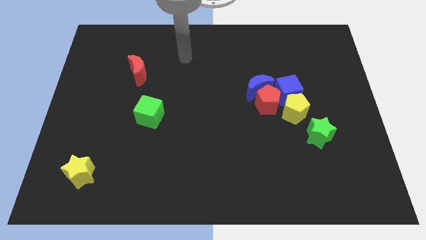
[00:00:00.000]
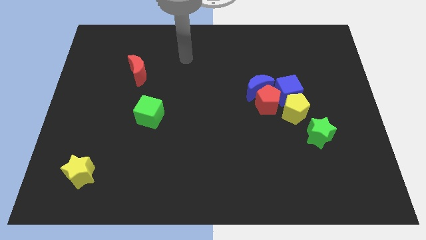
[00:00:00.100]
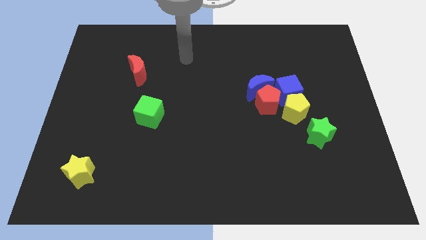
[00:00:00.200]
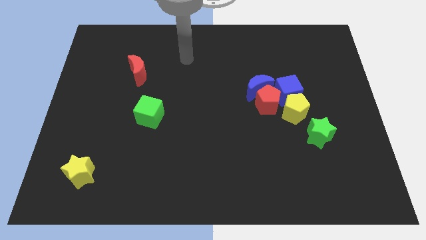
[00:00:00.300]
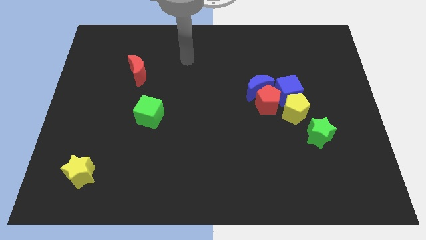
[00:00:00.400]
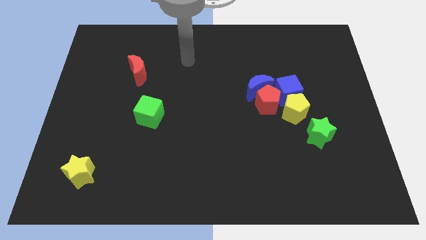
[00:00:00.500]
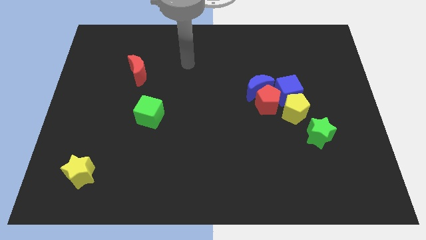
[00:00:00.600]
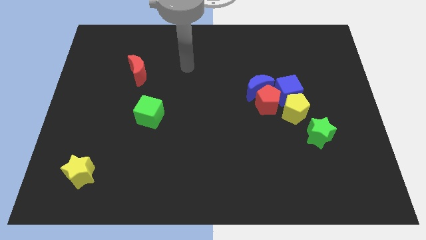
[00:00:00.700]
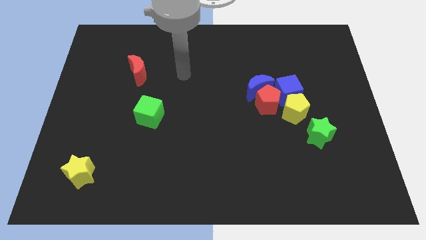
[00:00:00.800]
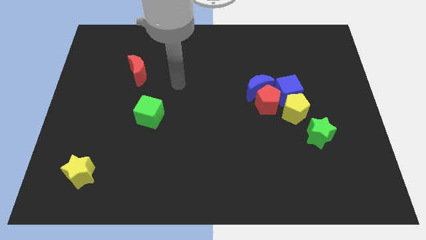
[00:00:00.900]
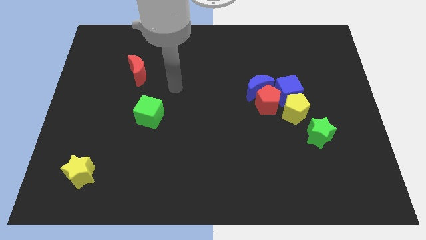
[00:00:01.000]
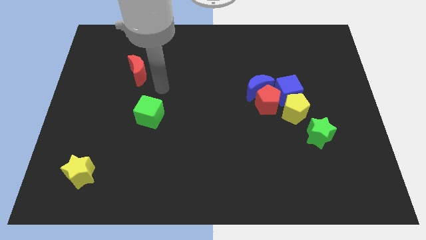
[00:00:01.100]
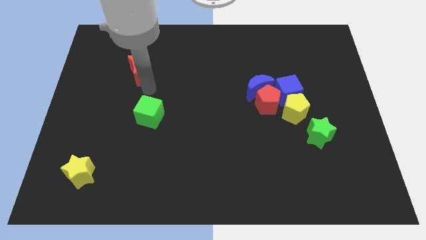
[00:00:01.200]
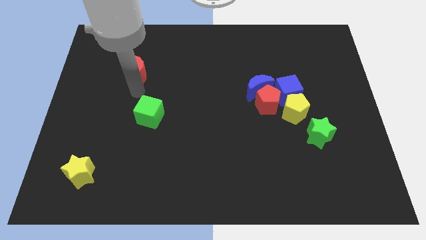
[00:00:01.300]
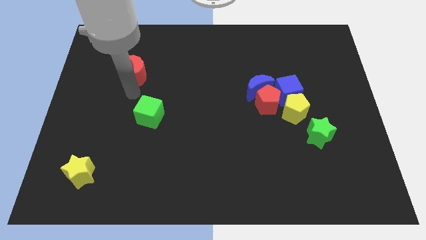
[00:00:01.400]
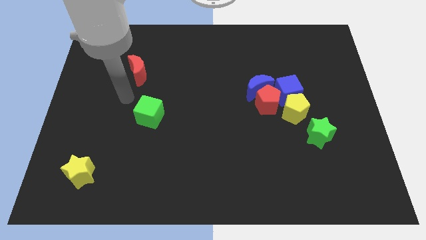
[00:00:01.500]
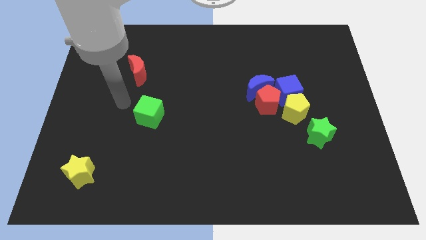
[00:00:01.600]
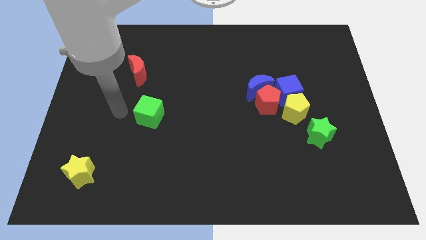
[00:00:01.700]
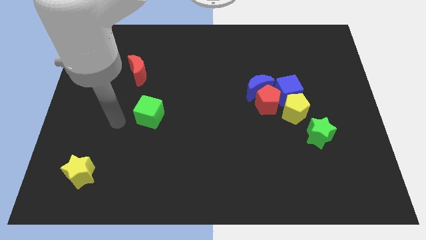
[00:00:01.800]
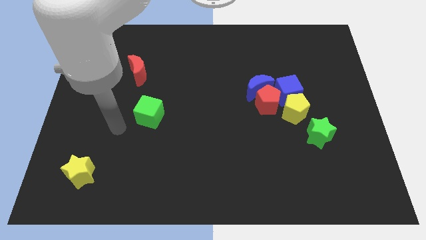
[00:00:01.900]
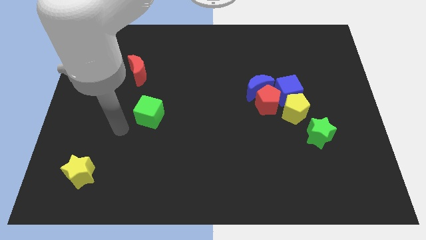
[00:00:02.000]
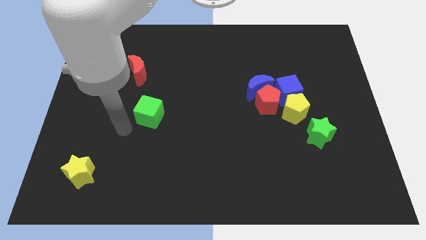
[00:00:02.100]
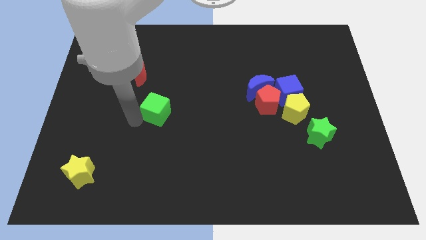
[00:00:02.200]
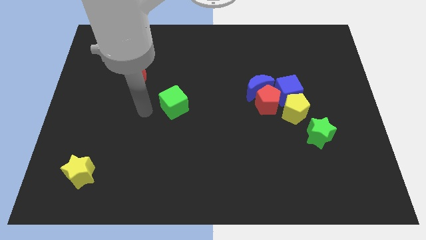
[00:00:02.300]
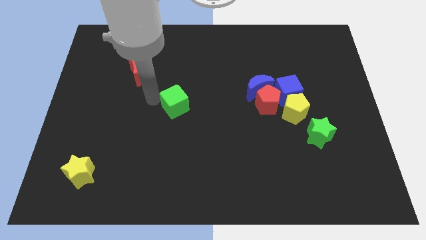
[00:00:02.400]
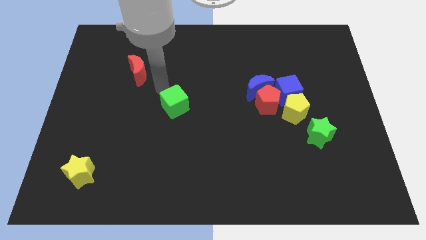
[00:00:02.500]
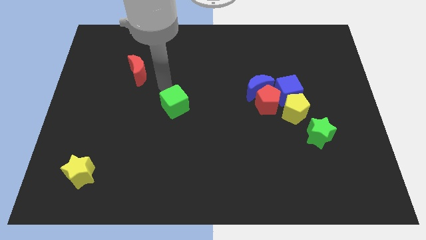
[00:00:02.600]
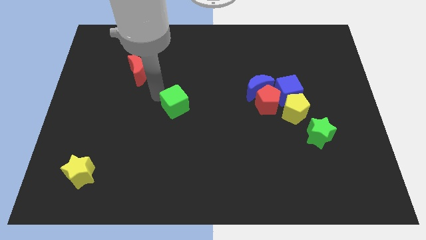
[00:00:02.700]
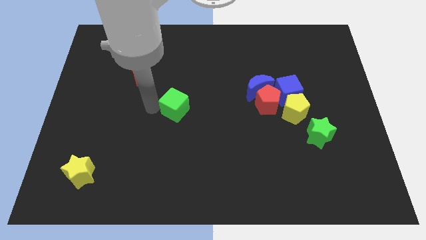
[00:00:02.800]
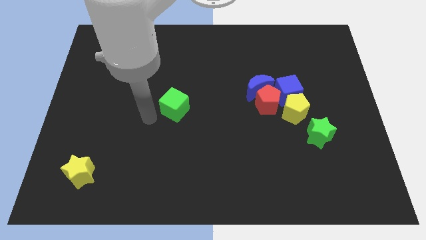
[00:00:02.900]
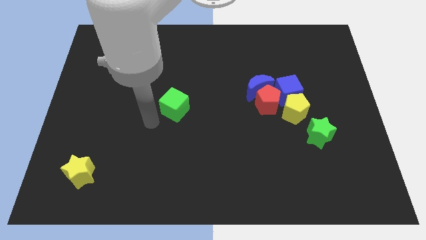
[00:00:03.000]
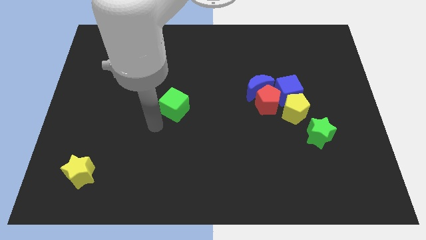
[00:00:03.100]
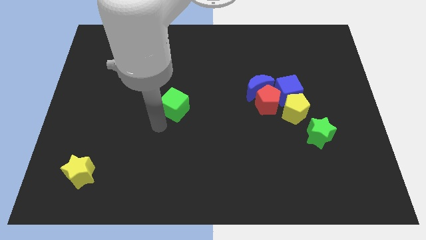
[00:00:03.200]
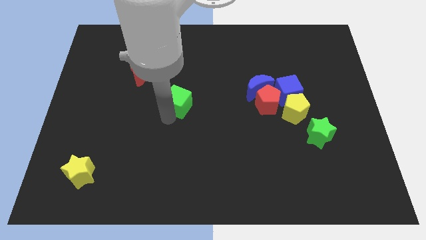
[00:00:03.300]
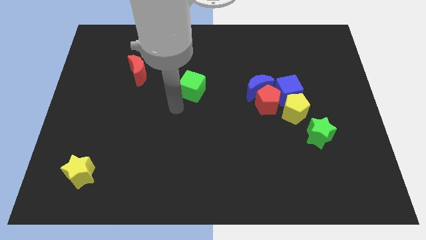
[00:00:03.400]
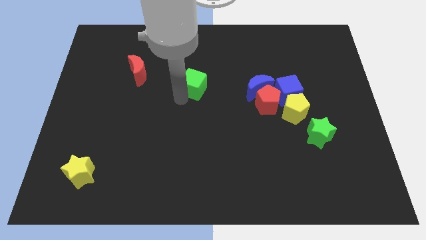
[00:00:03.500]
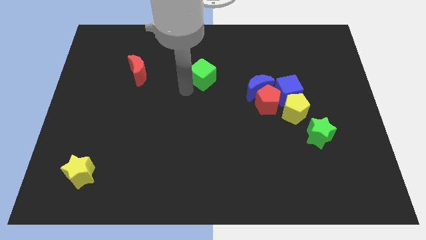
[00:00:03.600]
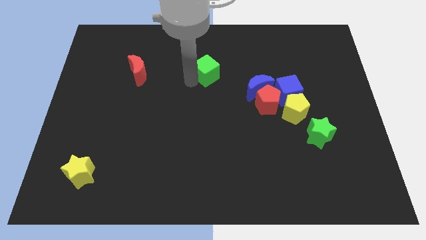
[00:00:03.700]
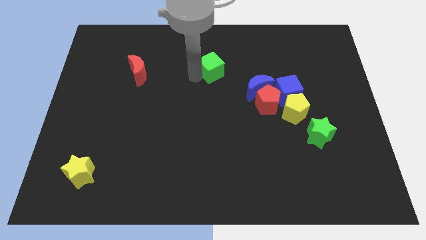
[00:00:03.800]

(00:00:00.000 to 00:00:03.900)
slide the green cube parallel right to the red moon

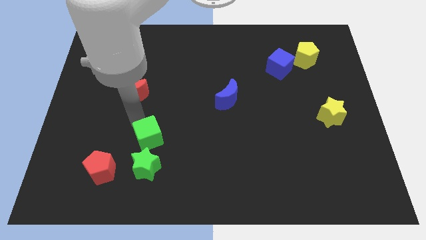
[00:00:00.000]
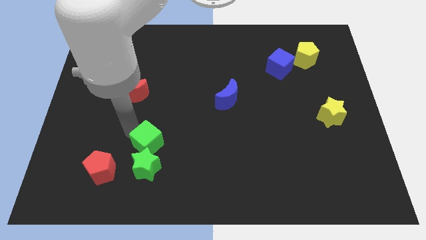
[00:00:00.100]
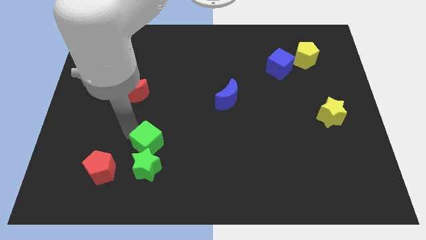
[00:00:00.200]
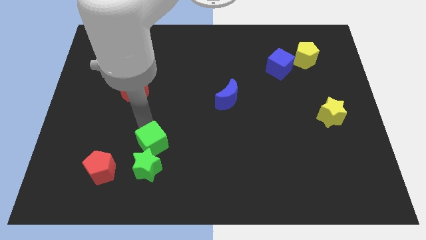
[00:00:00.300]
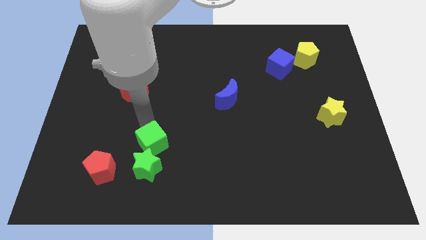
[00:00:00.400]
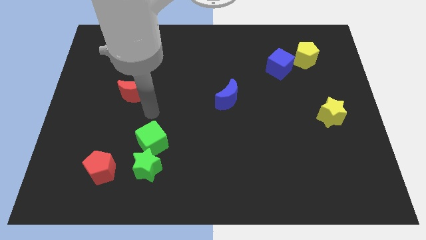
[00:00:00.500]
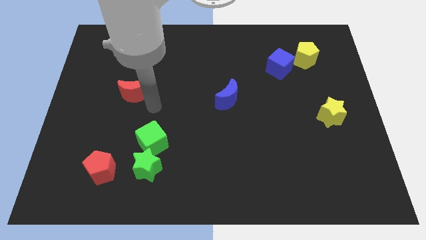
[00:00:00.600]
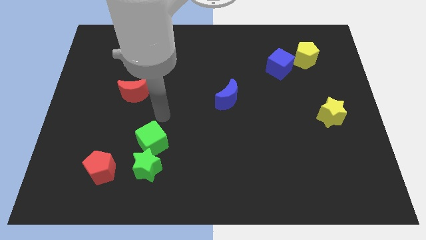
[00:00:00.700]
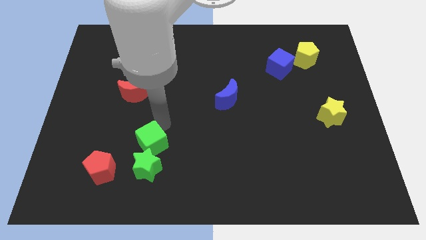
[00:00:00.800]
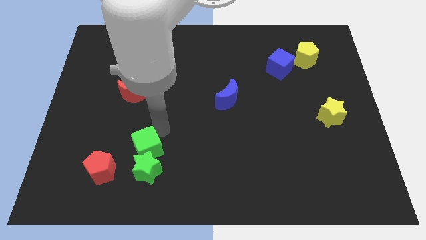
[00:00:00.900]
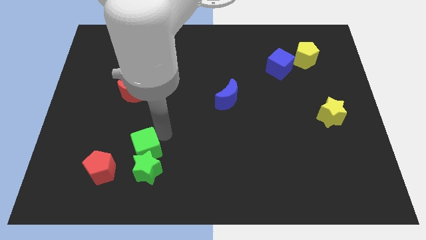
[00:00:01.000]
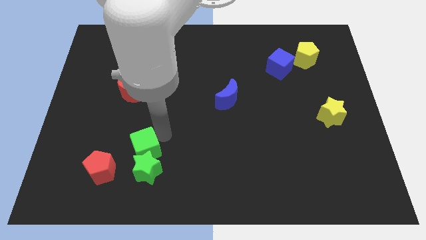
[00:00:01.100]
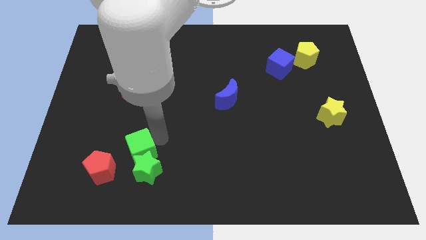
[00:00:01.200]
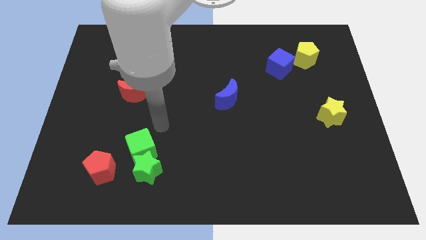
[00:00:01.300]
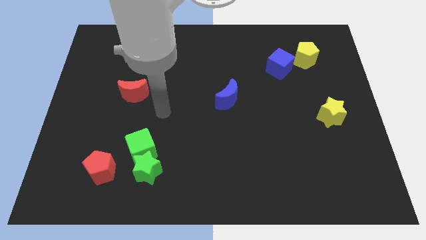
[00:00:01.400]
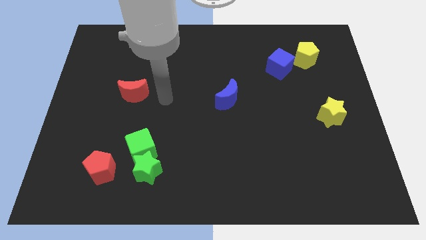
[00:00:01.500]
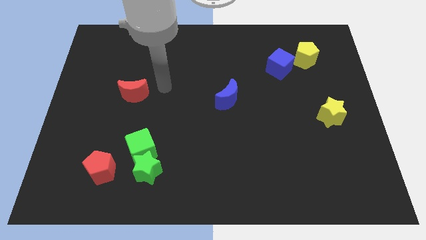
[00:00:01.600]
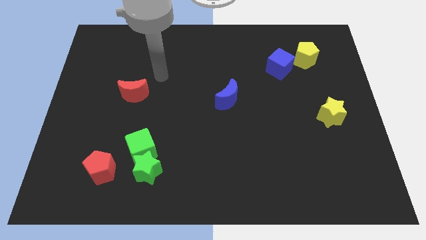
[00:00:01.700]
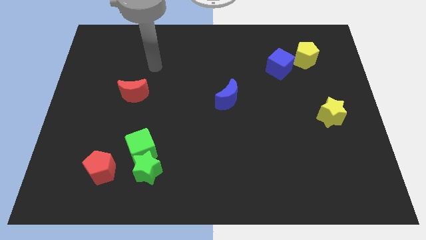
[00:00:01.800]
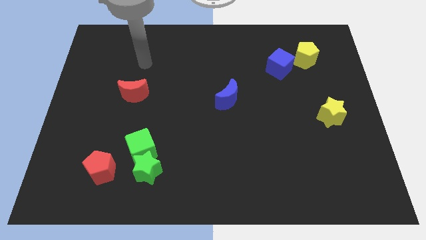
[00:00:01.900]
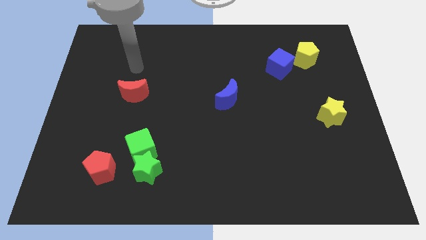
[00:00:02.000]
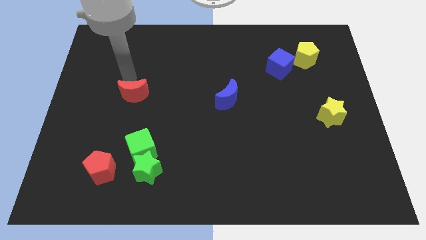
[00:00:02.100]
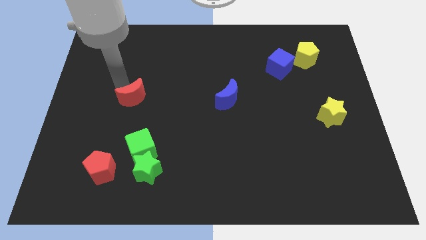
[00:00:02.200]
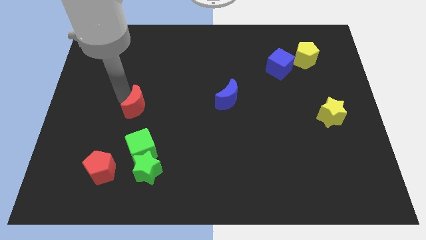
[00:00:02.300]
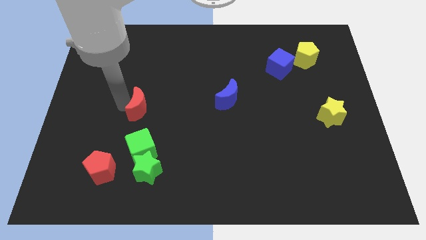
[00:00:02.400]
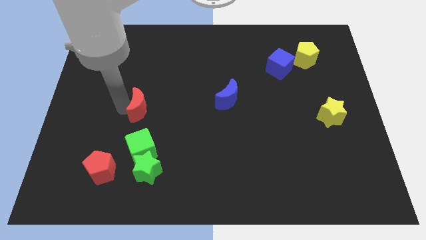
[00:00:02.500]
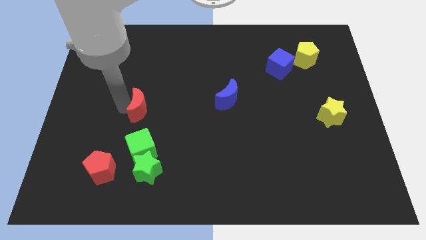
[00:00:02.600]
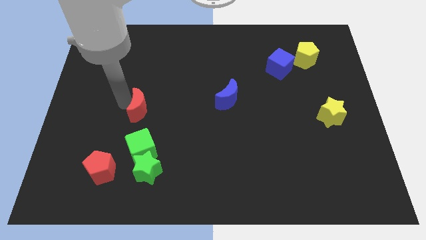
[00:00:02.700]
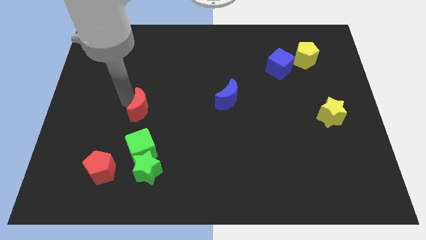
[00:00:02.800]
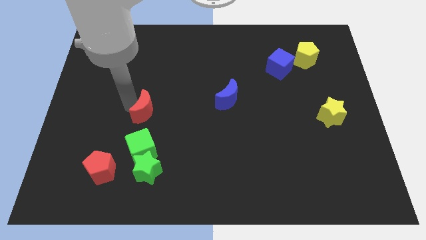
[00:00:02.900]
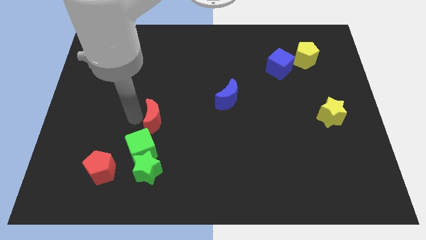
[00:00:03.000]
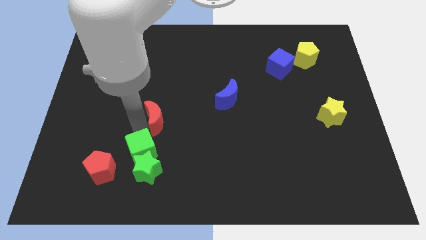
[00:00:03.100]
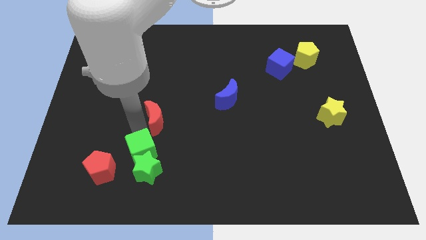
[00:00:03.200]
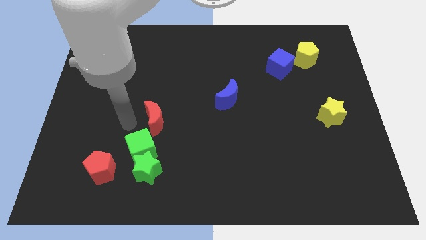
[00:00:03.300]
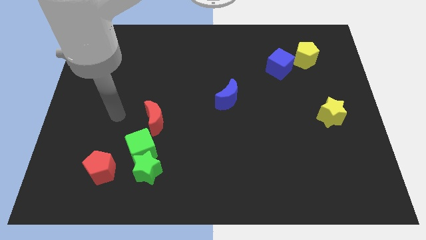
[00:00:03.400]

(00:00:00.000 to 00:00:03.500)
place red moon above green cube

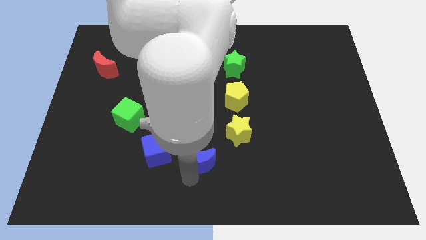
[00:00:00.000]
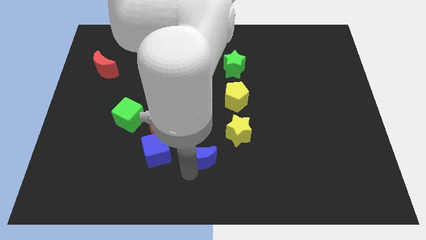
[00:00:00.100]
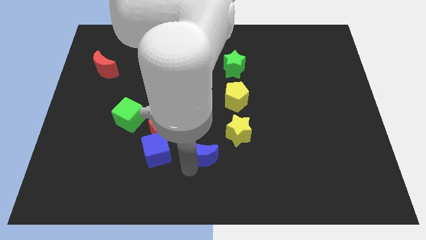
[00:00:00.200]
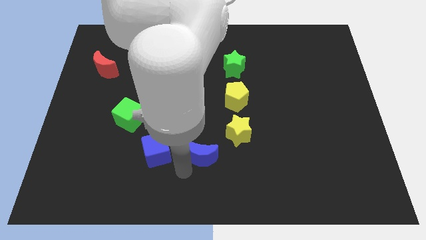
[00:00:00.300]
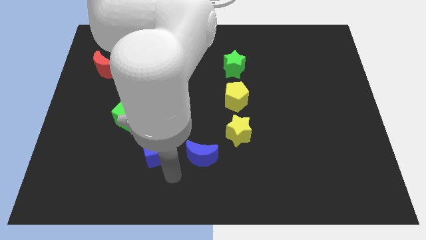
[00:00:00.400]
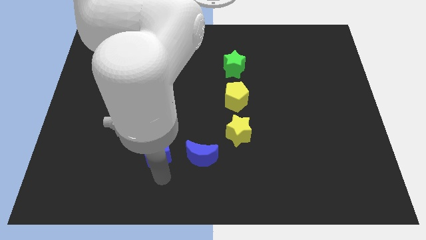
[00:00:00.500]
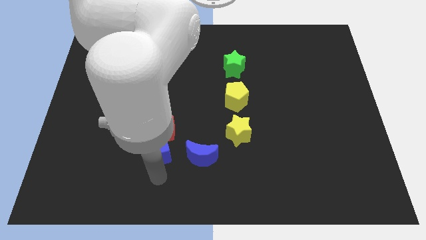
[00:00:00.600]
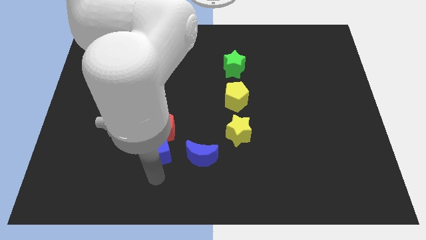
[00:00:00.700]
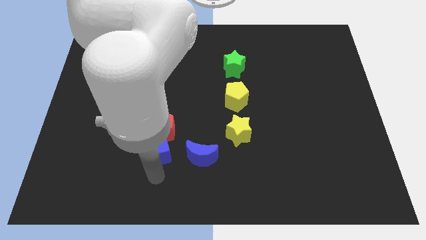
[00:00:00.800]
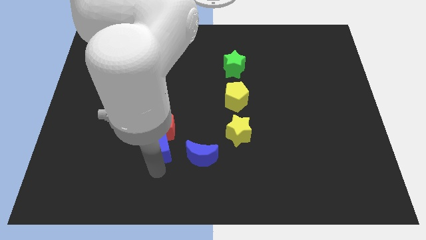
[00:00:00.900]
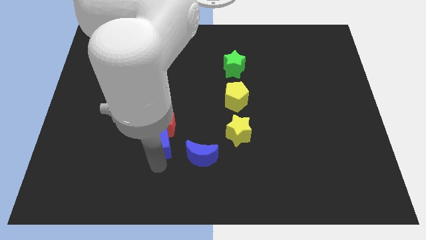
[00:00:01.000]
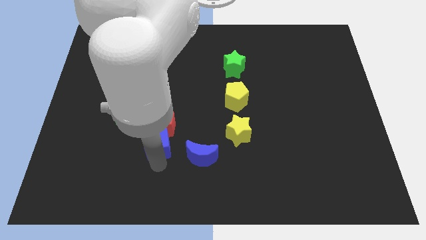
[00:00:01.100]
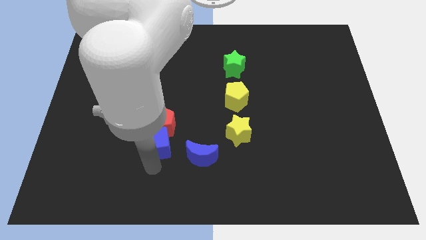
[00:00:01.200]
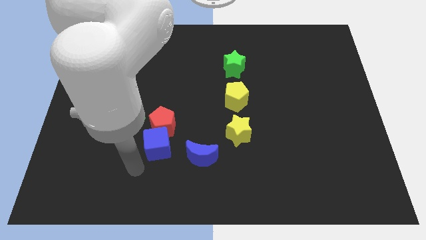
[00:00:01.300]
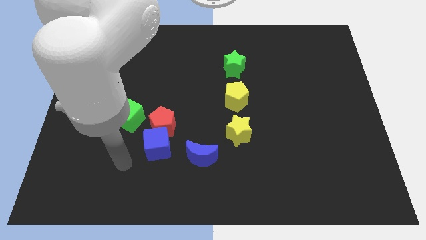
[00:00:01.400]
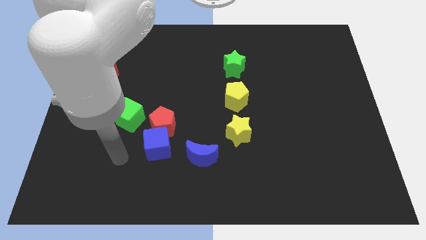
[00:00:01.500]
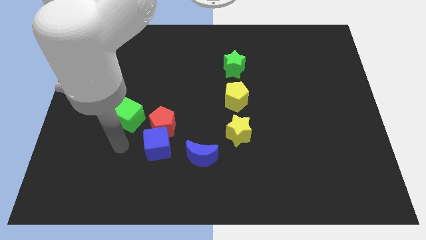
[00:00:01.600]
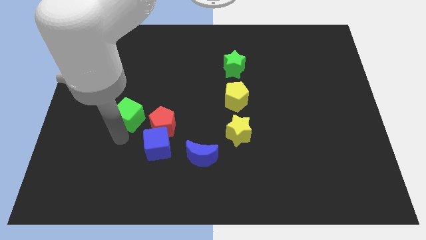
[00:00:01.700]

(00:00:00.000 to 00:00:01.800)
push the blue cube into red pentagon
